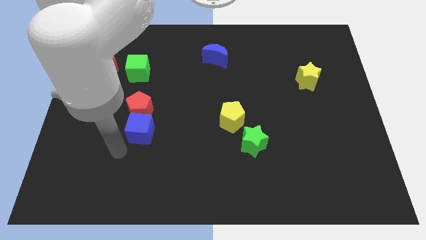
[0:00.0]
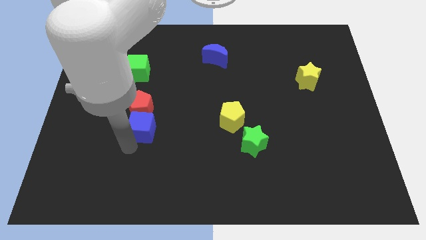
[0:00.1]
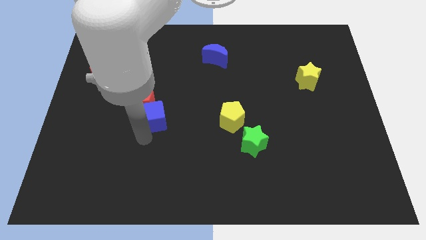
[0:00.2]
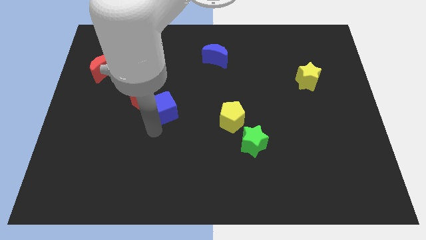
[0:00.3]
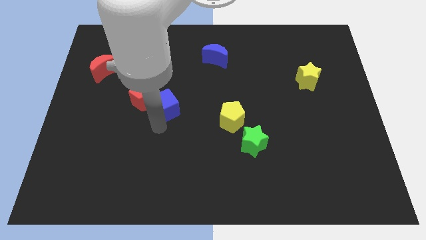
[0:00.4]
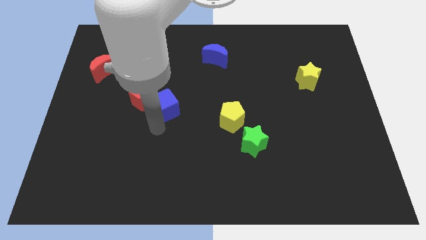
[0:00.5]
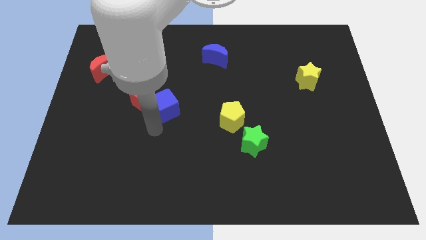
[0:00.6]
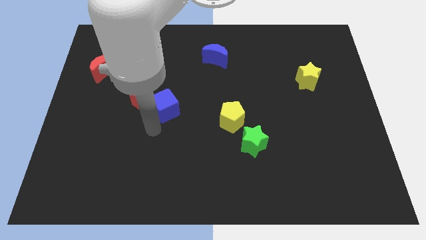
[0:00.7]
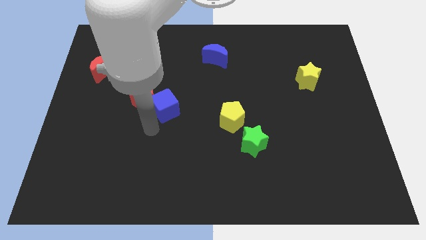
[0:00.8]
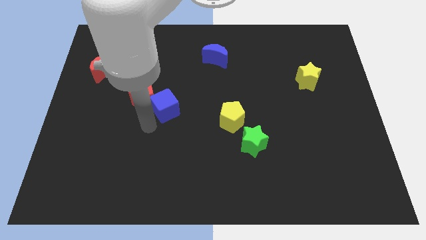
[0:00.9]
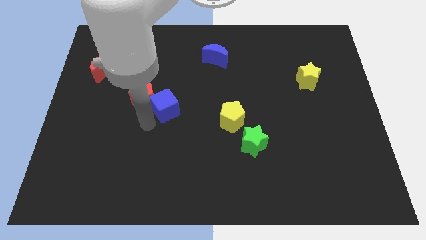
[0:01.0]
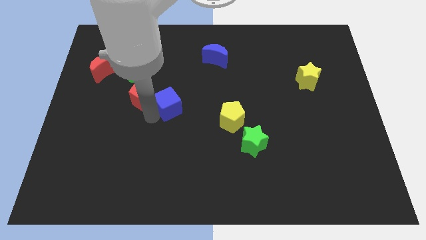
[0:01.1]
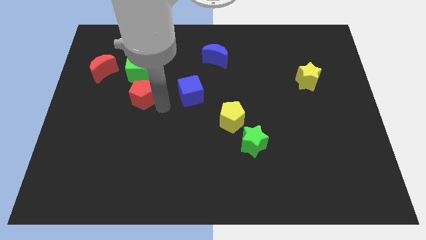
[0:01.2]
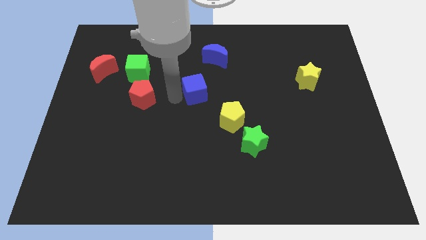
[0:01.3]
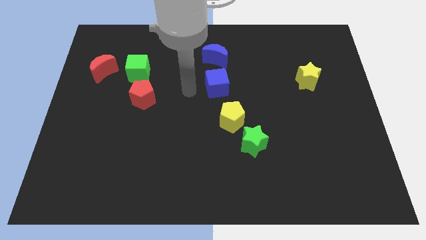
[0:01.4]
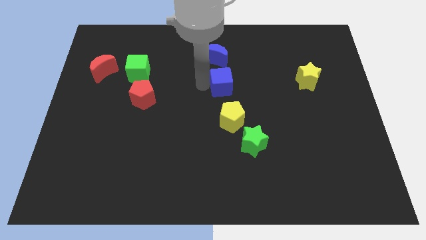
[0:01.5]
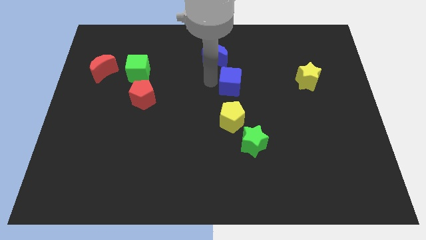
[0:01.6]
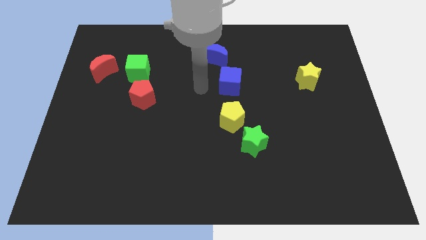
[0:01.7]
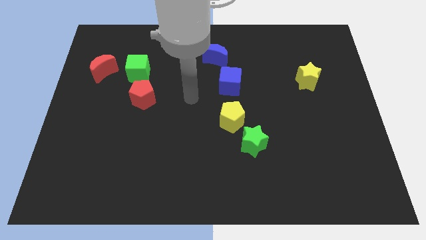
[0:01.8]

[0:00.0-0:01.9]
place the blue cube above the yellow pentagon

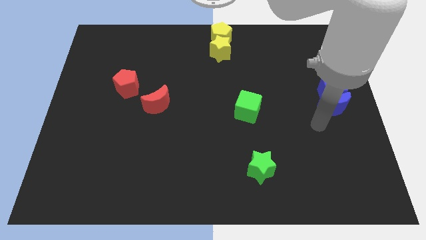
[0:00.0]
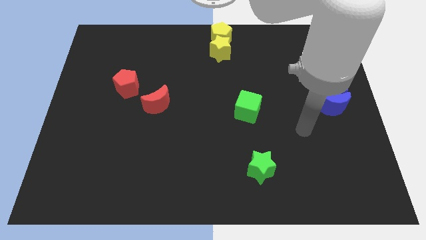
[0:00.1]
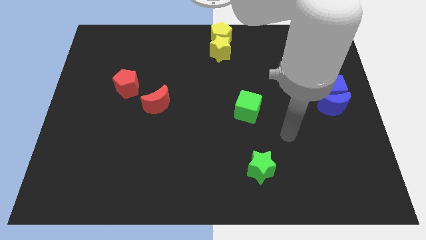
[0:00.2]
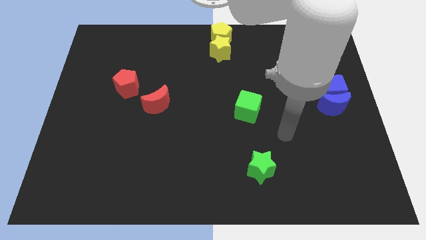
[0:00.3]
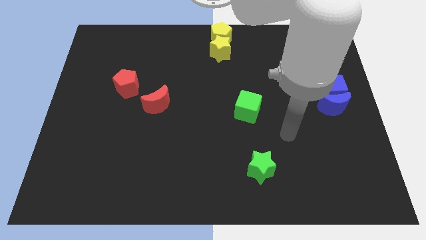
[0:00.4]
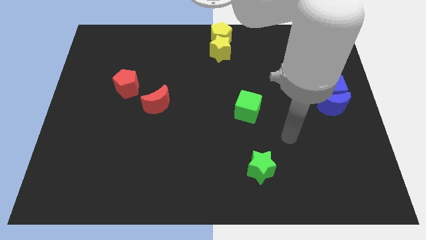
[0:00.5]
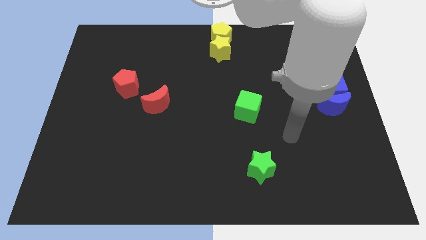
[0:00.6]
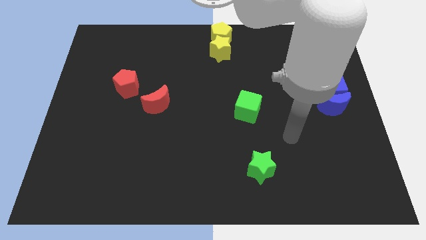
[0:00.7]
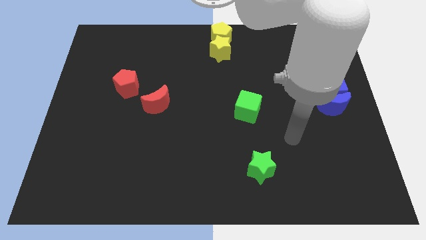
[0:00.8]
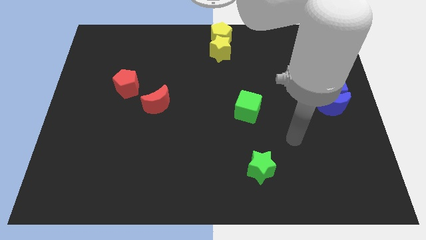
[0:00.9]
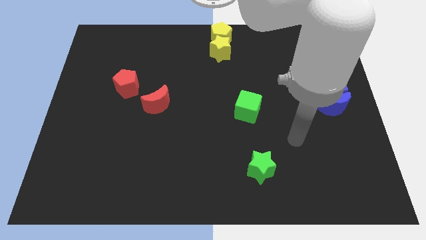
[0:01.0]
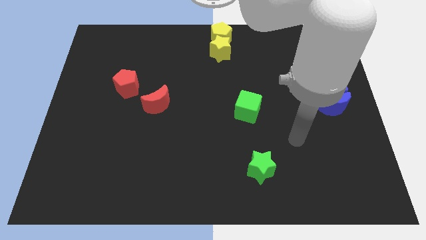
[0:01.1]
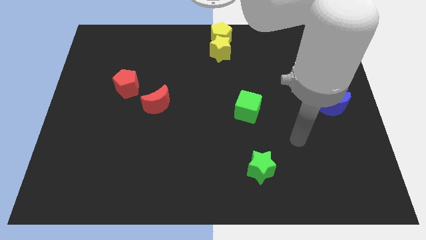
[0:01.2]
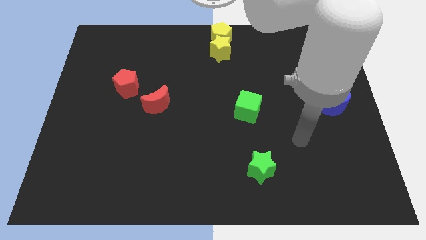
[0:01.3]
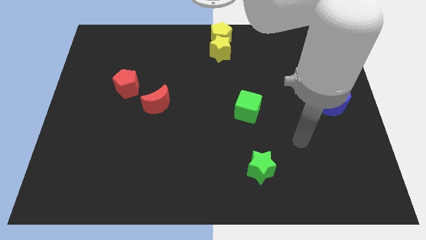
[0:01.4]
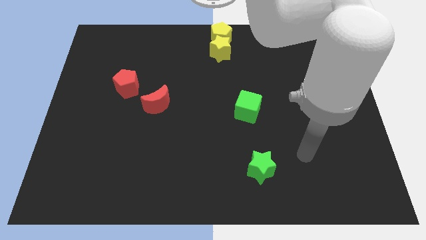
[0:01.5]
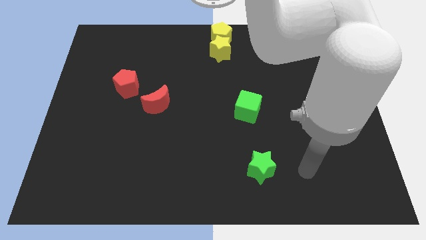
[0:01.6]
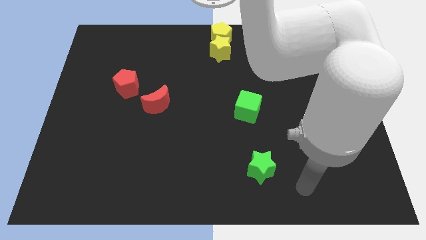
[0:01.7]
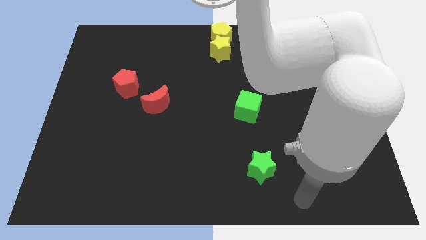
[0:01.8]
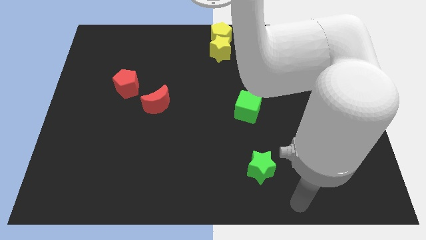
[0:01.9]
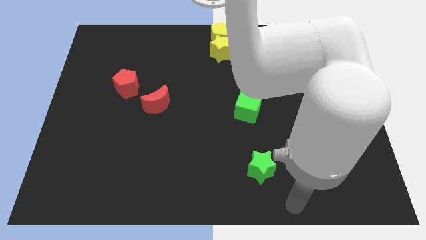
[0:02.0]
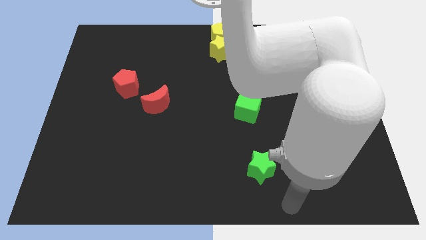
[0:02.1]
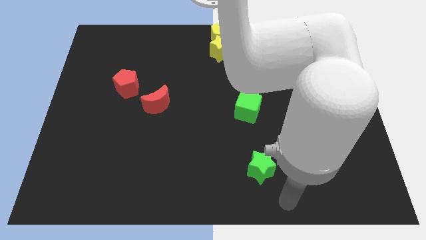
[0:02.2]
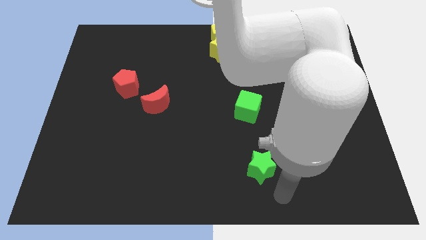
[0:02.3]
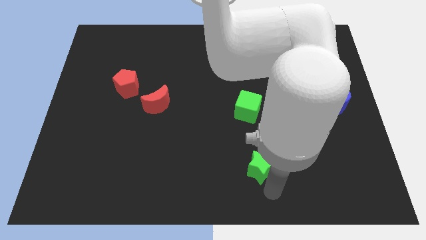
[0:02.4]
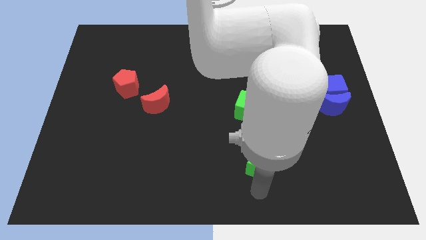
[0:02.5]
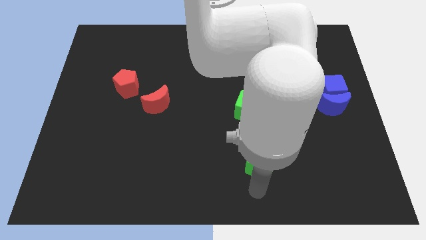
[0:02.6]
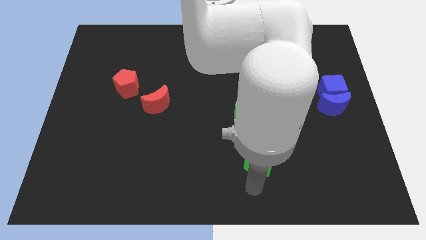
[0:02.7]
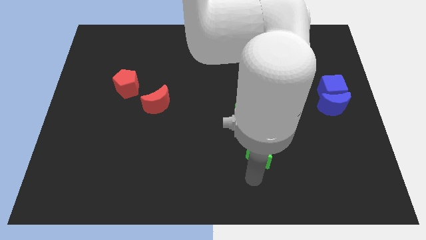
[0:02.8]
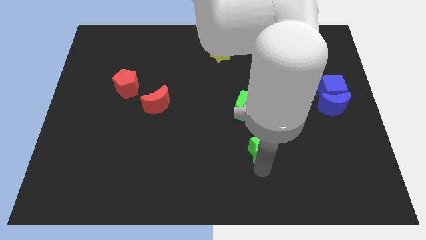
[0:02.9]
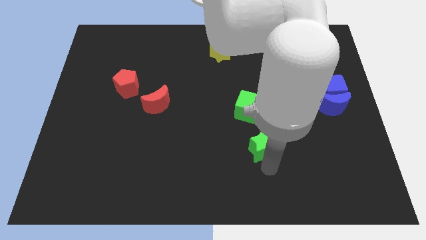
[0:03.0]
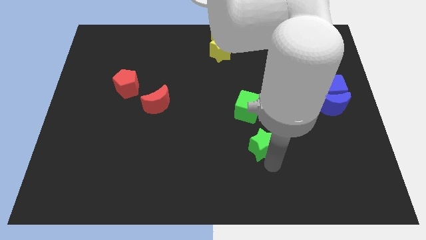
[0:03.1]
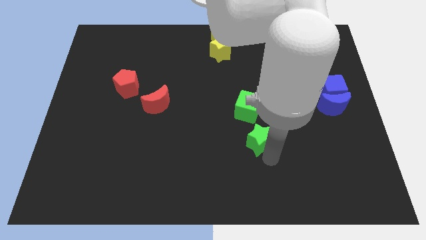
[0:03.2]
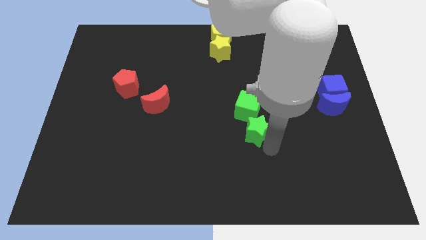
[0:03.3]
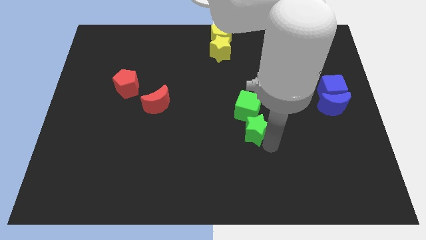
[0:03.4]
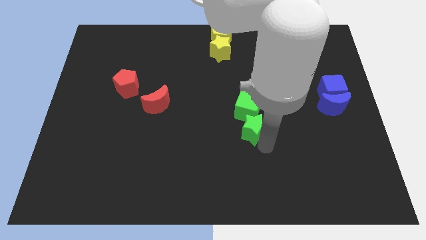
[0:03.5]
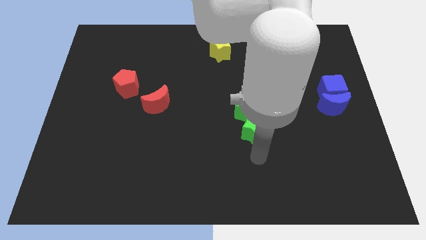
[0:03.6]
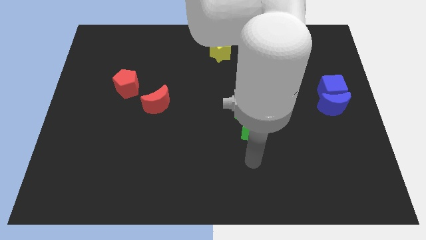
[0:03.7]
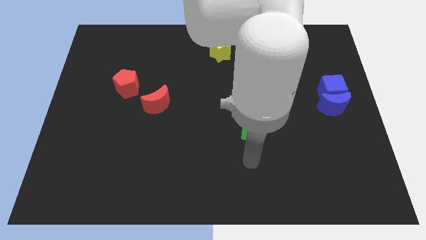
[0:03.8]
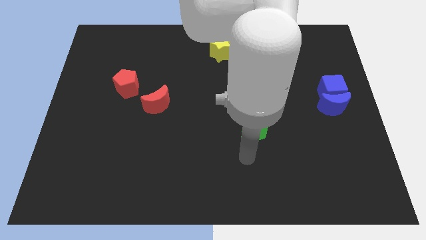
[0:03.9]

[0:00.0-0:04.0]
move the green star below the green cube

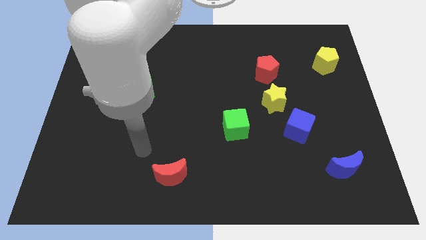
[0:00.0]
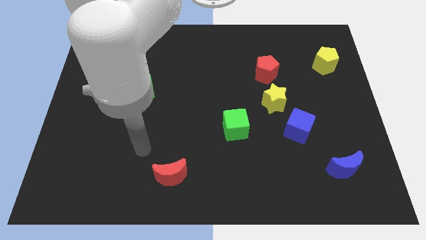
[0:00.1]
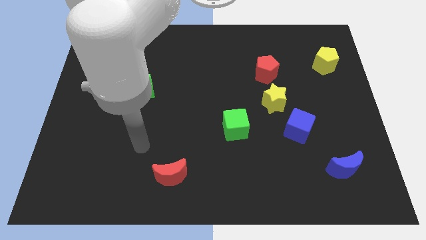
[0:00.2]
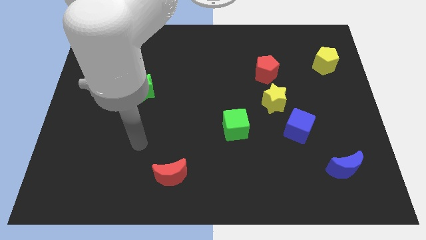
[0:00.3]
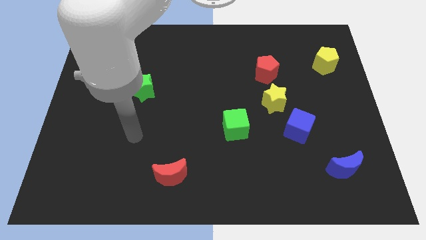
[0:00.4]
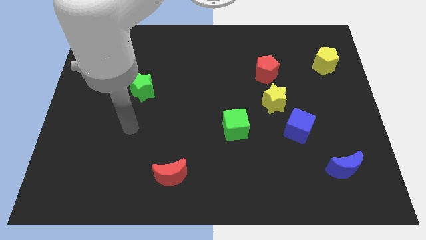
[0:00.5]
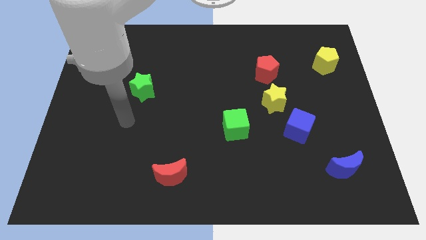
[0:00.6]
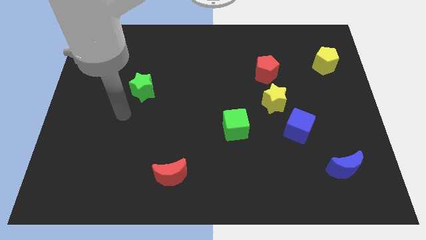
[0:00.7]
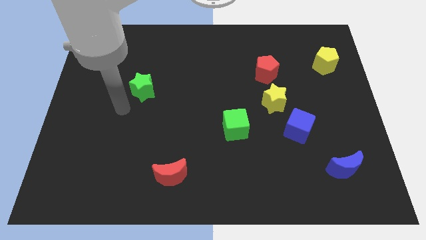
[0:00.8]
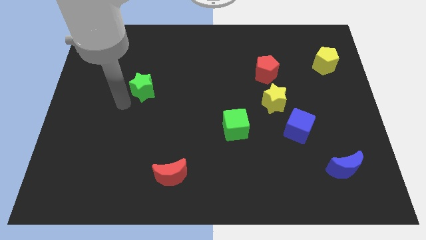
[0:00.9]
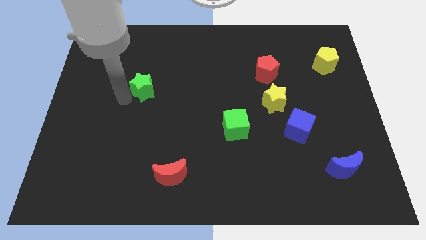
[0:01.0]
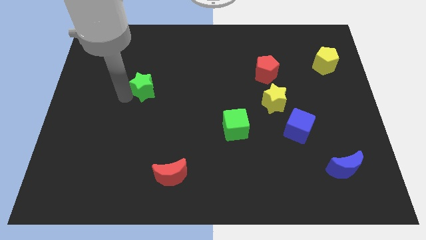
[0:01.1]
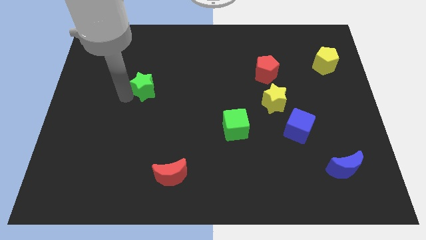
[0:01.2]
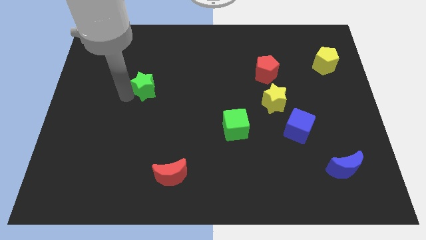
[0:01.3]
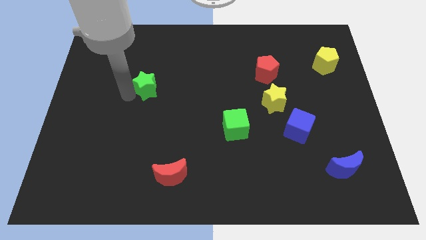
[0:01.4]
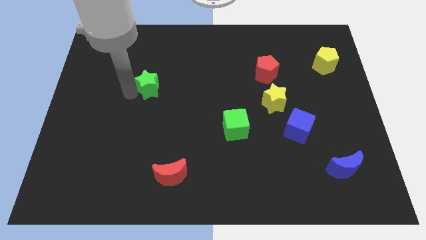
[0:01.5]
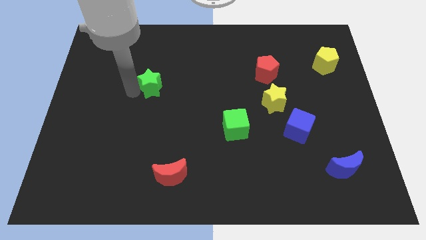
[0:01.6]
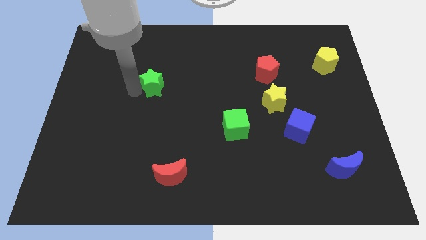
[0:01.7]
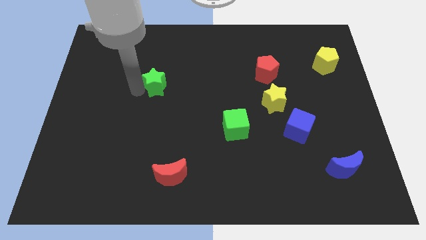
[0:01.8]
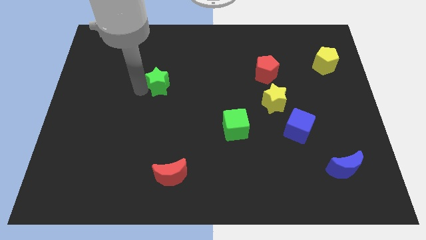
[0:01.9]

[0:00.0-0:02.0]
slide the green star slightly up

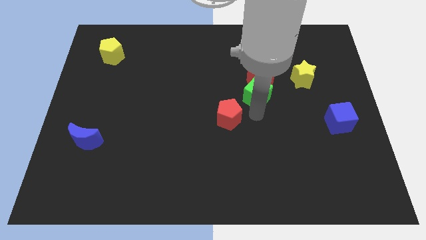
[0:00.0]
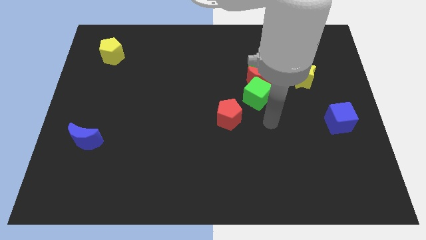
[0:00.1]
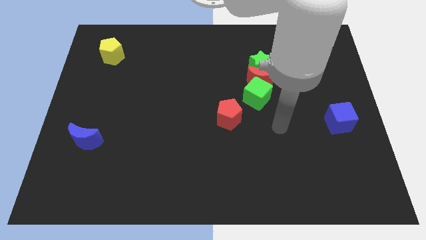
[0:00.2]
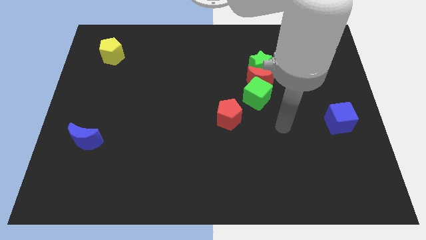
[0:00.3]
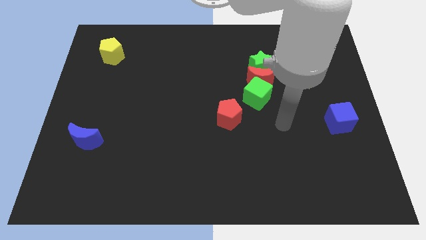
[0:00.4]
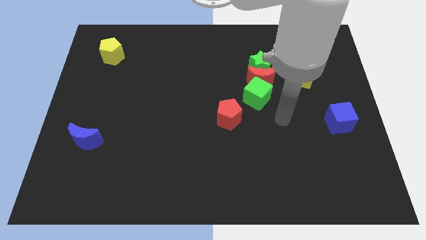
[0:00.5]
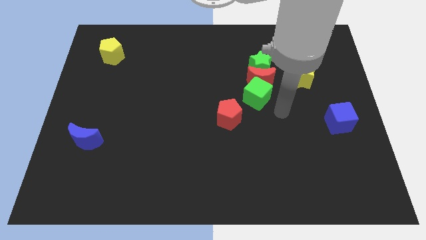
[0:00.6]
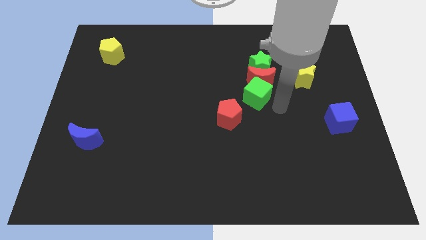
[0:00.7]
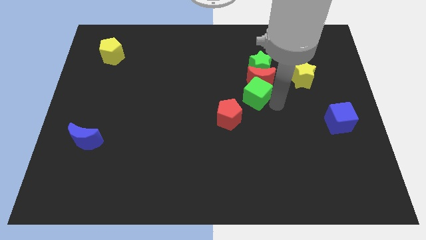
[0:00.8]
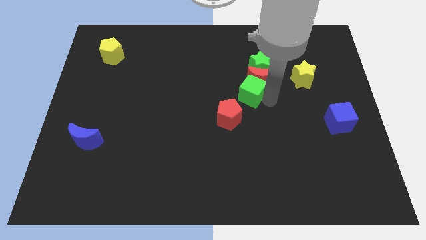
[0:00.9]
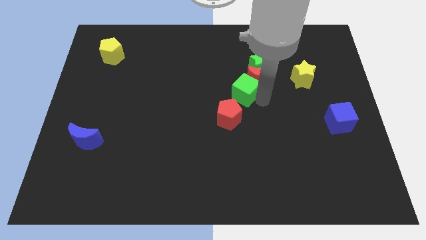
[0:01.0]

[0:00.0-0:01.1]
move green cube diagonal in between red blocks
